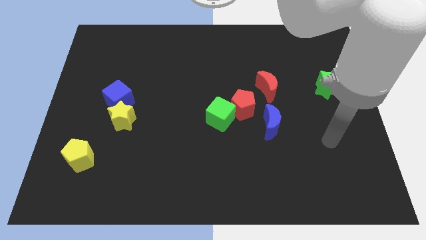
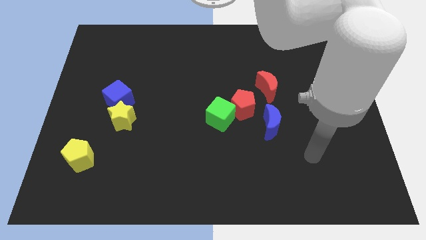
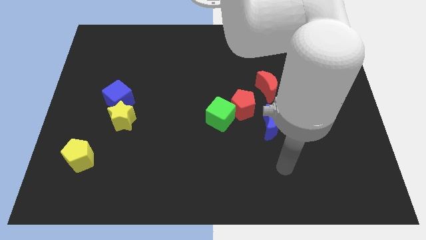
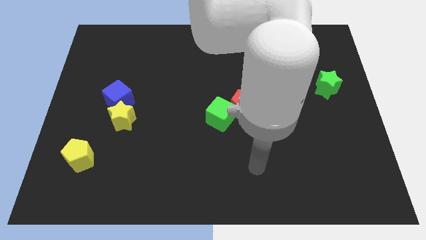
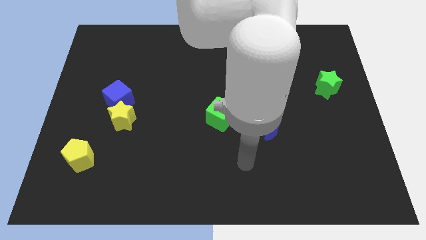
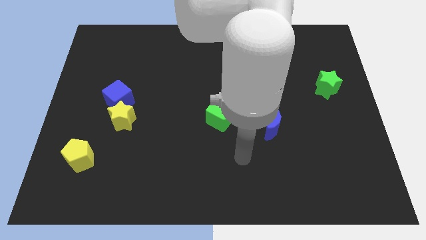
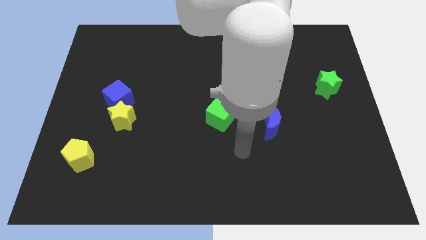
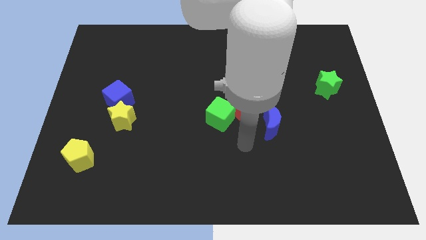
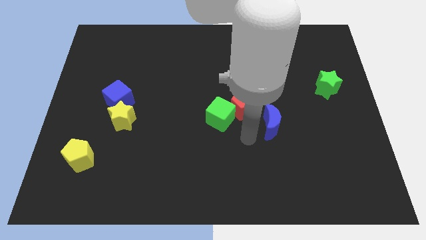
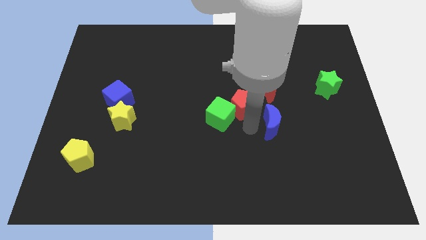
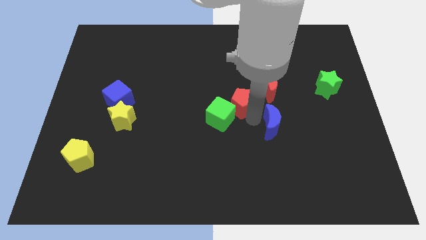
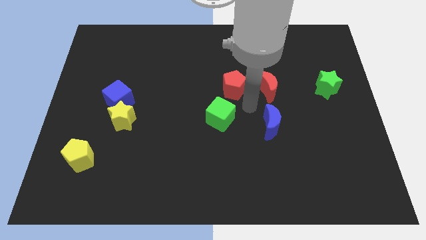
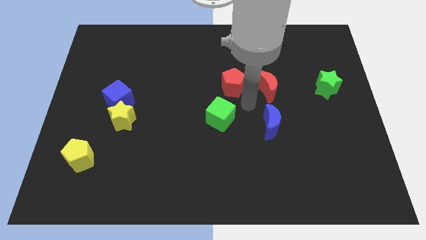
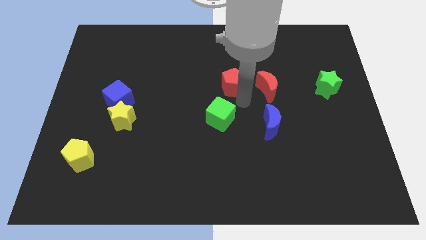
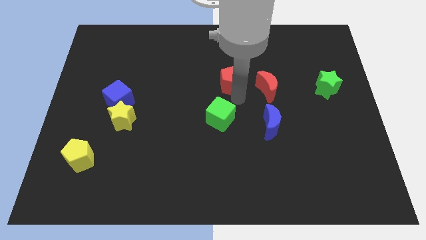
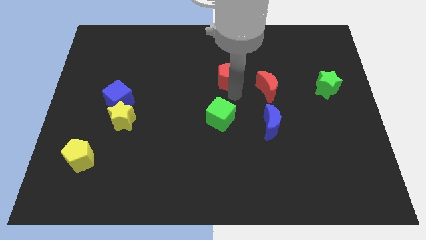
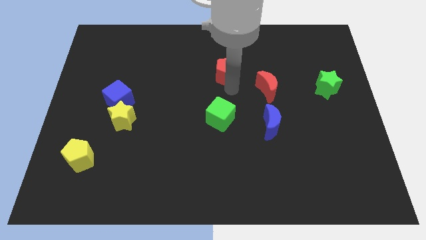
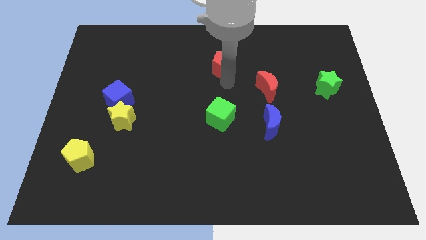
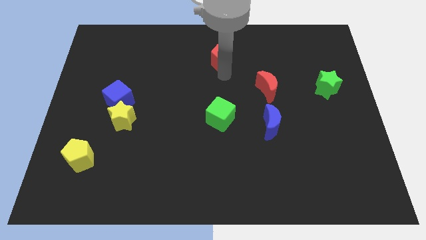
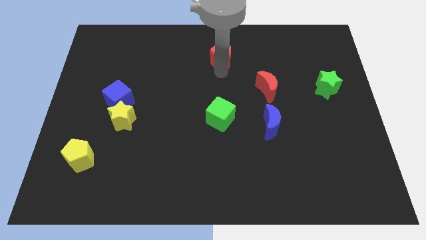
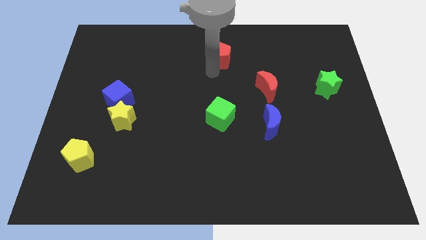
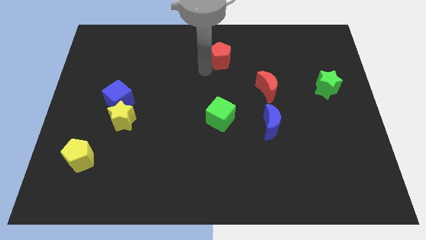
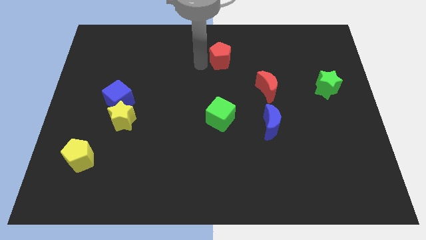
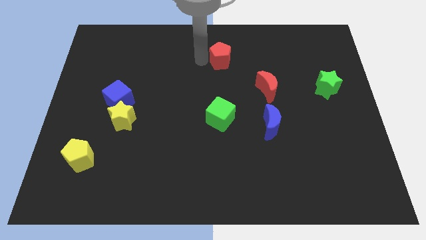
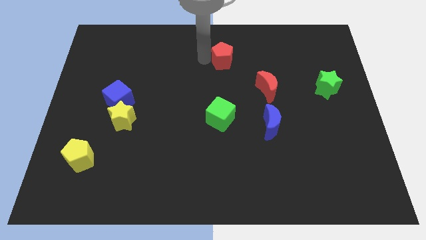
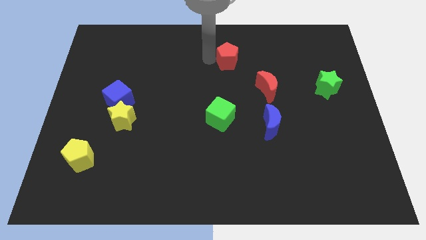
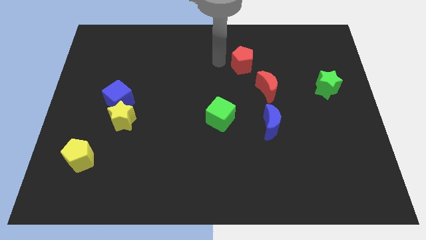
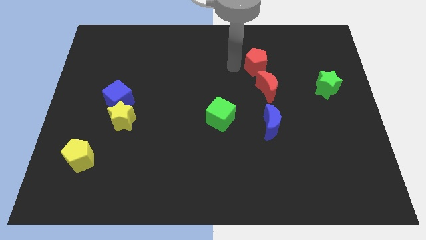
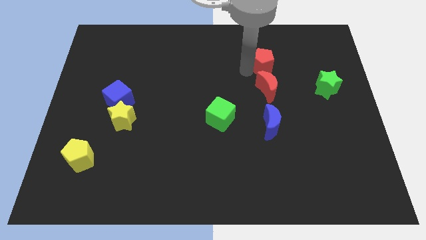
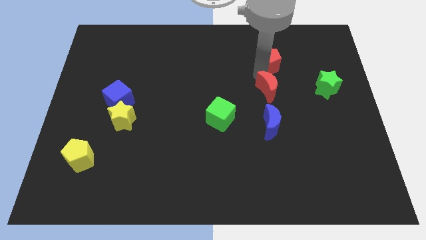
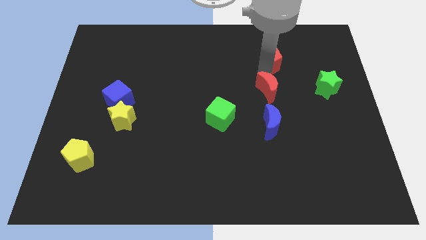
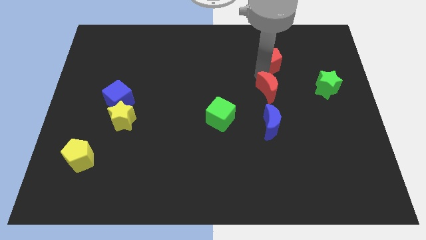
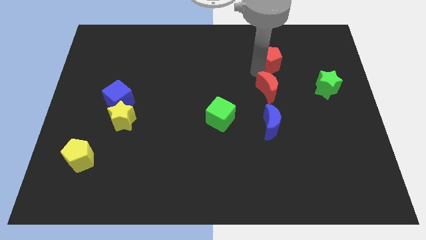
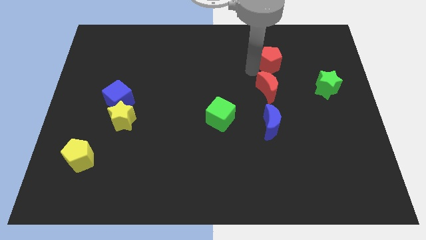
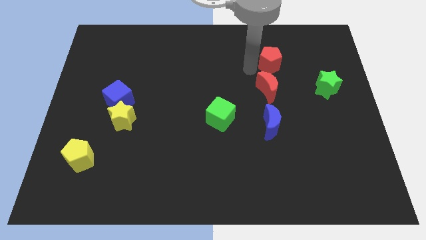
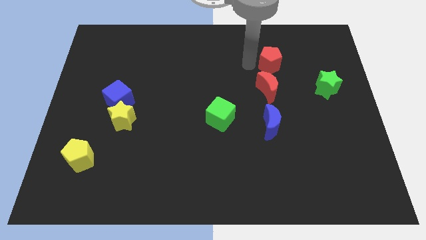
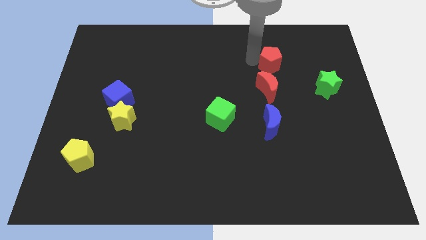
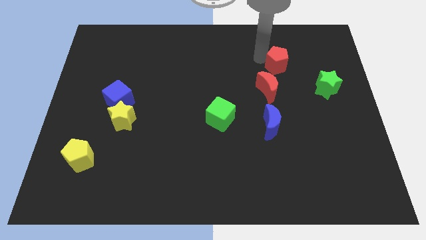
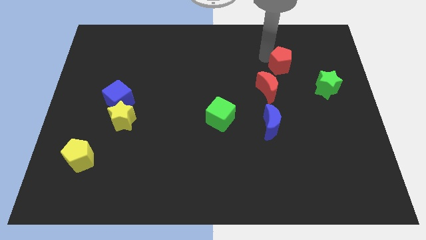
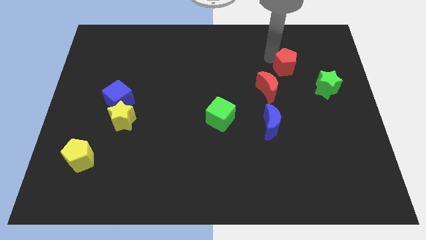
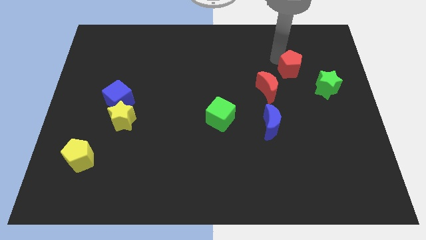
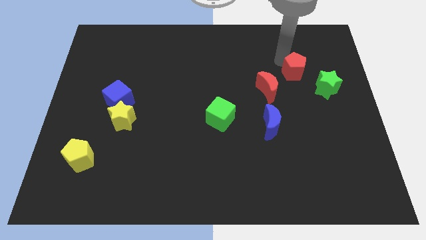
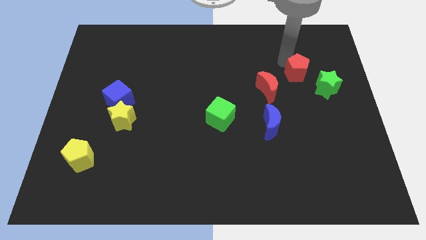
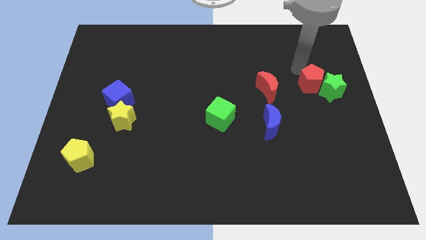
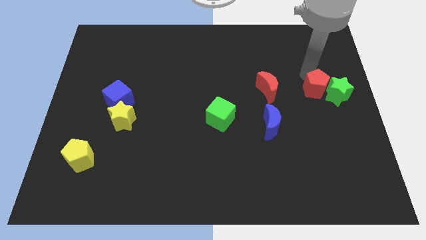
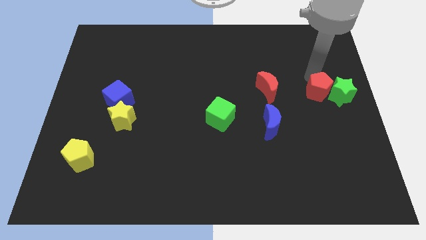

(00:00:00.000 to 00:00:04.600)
push the red pentagon to the green star

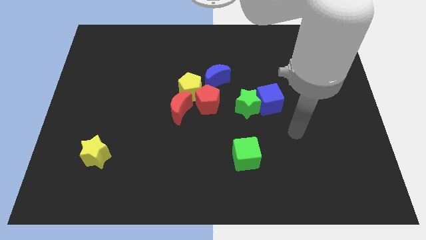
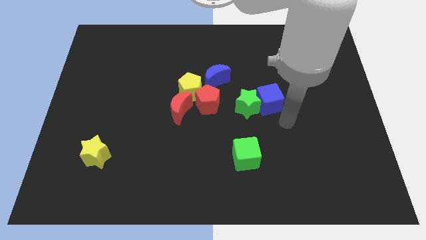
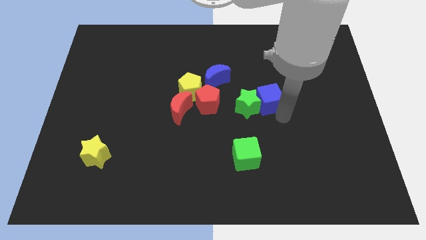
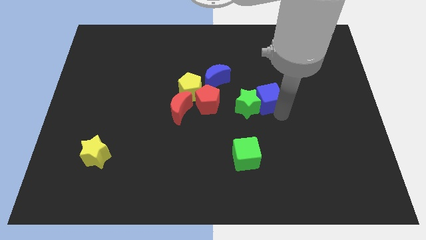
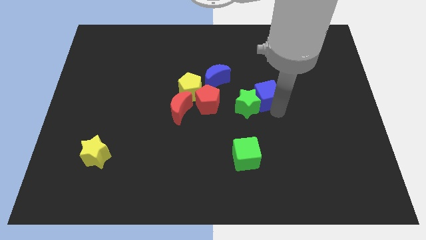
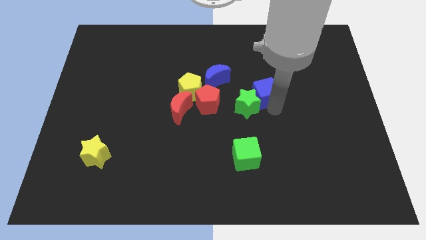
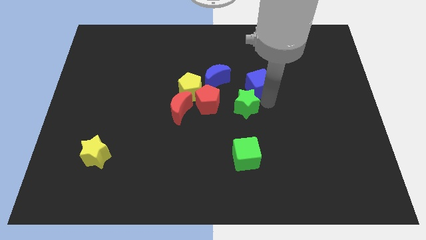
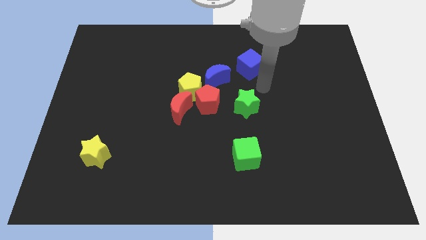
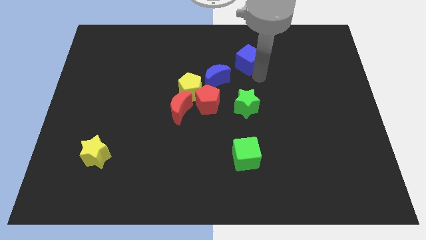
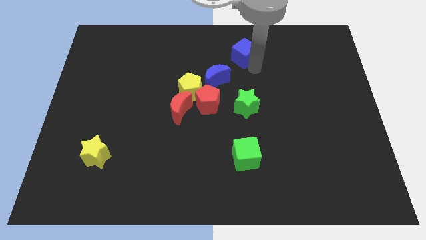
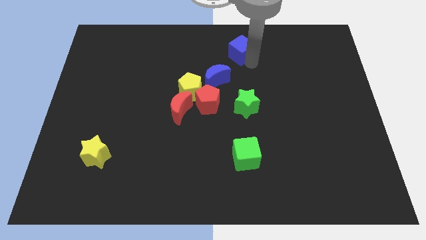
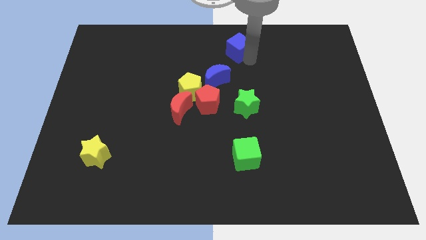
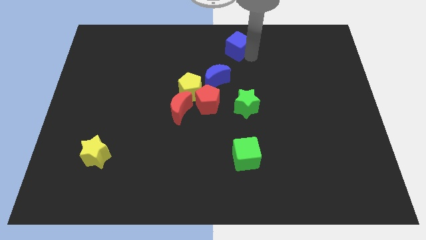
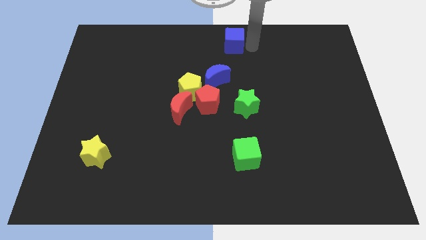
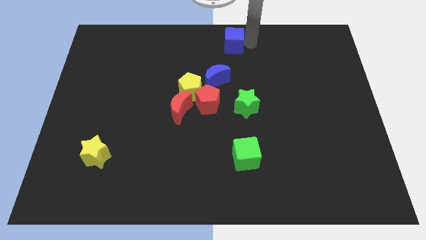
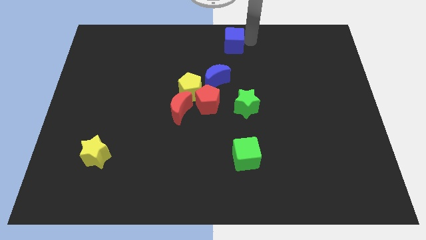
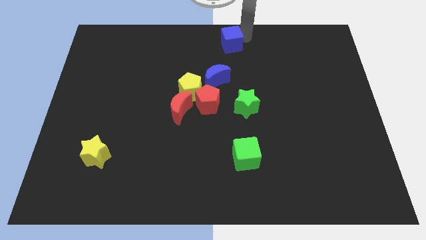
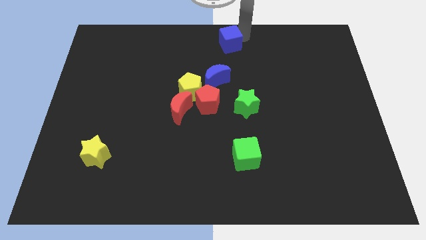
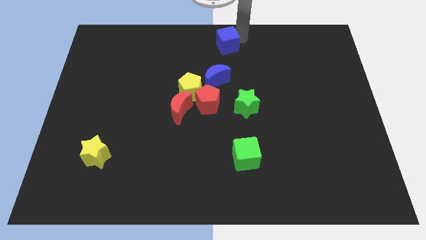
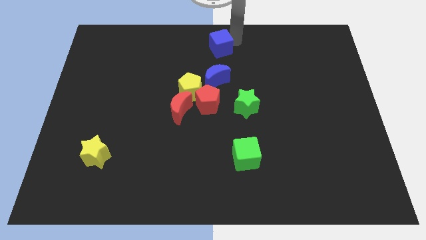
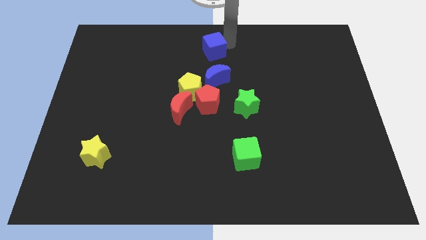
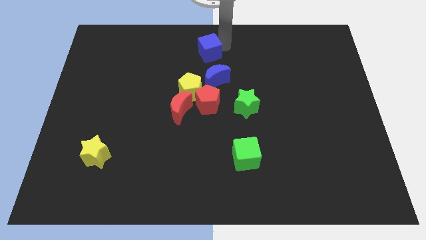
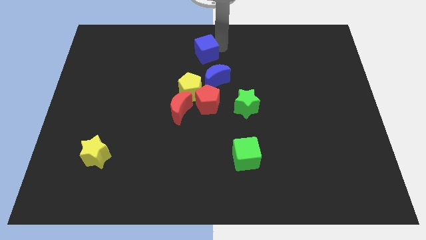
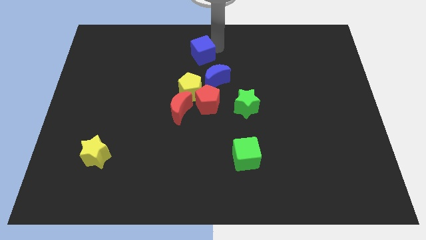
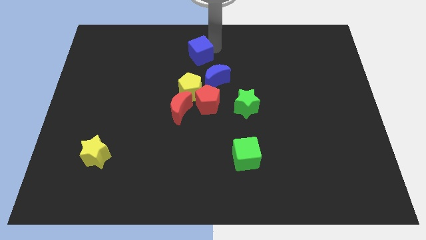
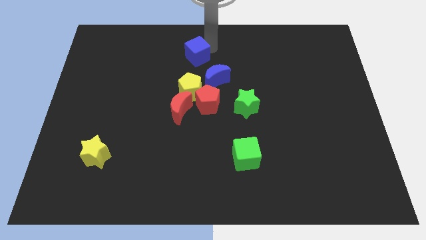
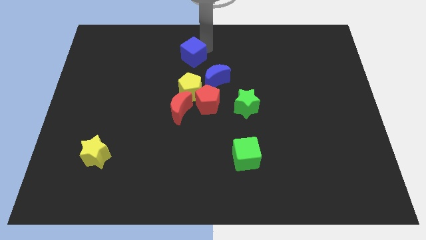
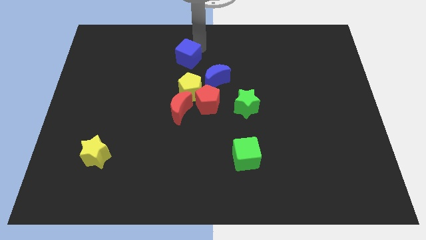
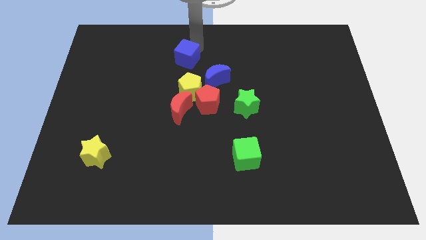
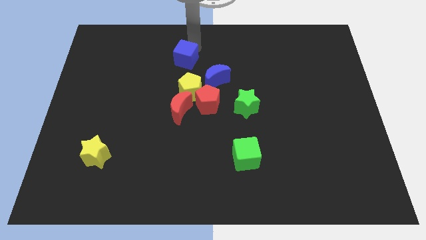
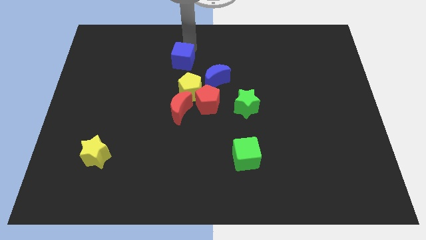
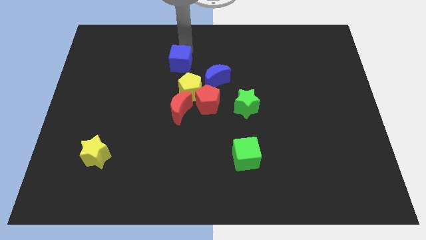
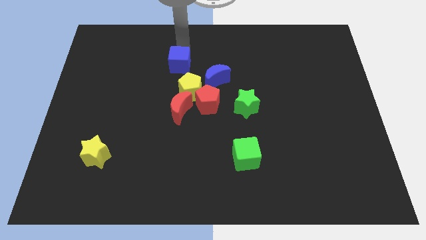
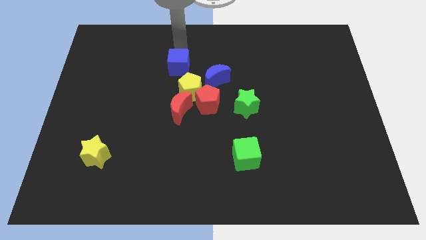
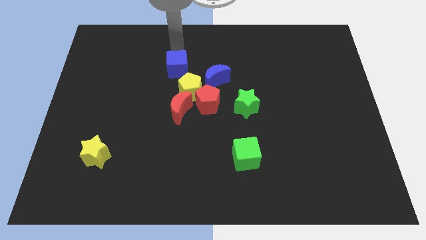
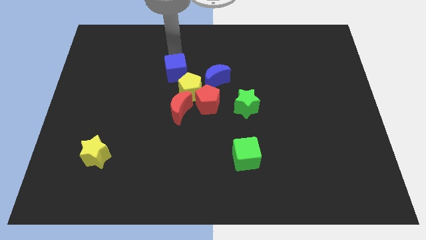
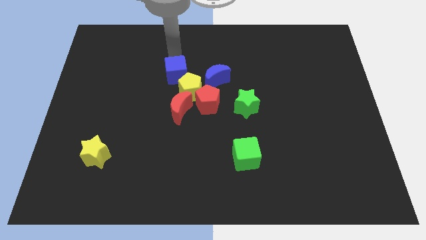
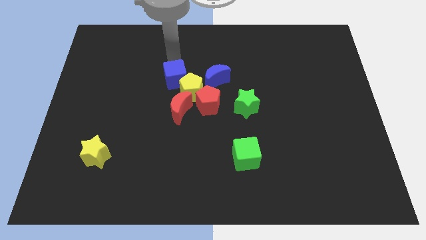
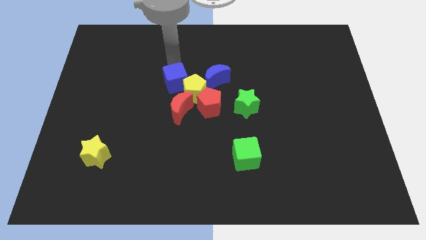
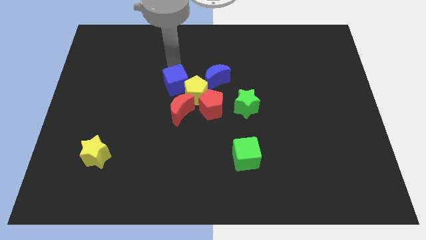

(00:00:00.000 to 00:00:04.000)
move the blue cube next to the yellow pentagon
